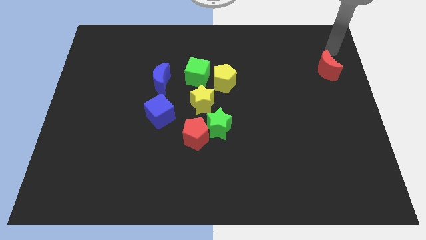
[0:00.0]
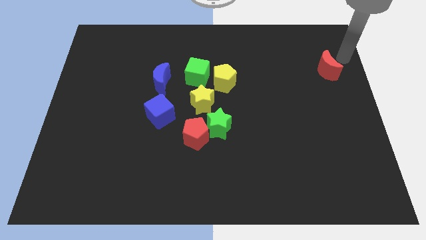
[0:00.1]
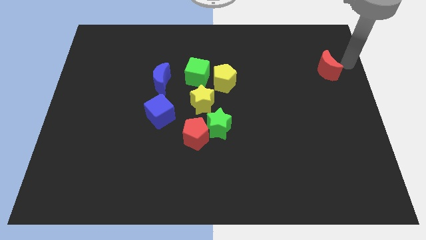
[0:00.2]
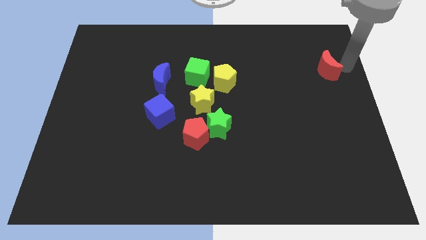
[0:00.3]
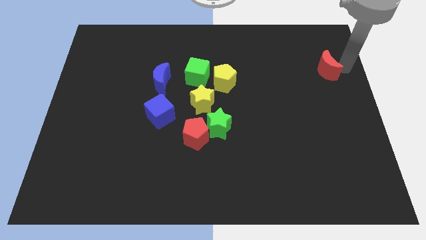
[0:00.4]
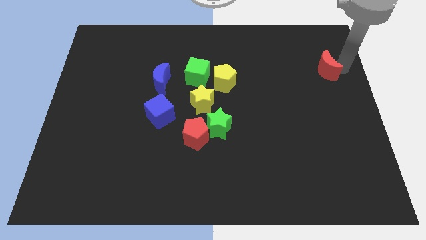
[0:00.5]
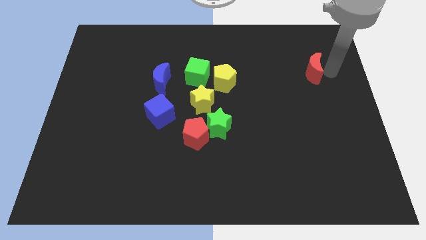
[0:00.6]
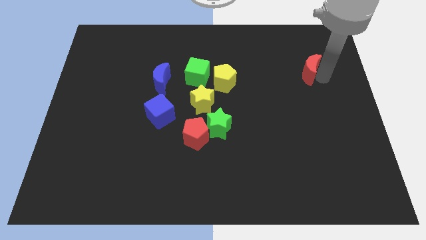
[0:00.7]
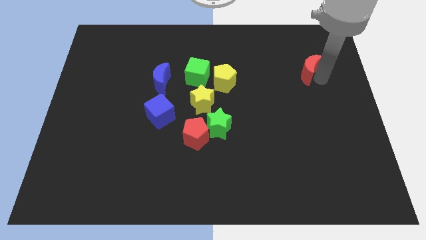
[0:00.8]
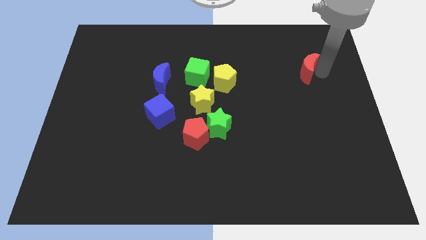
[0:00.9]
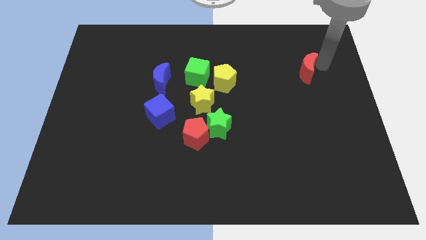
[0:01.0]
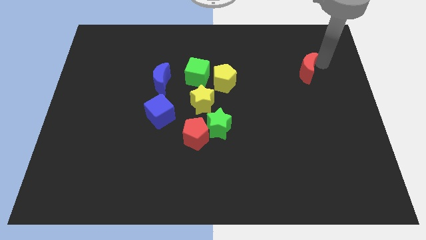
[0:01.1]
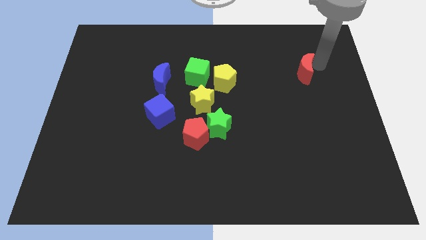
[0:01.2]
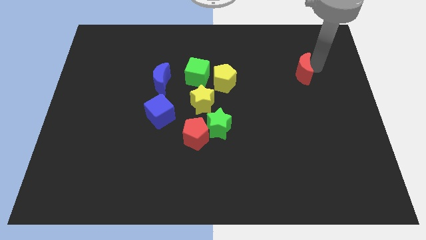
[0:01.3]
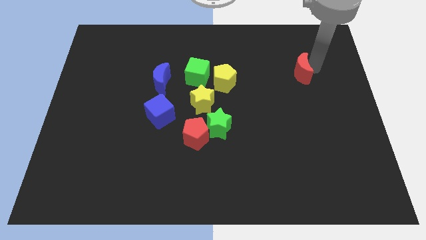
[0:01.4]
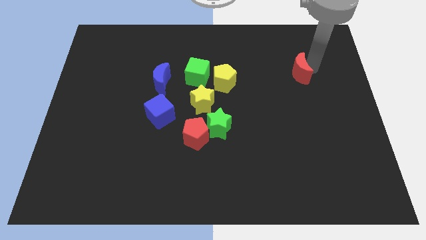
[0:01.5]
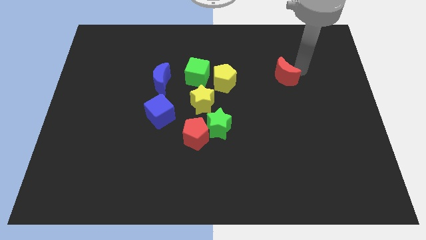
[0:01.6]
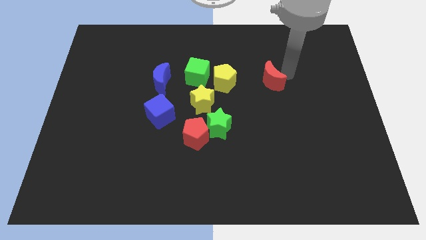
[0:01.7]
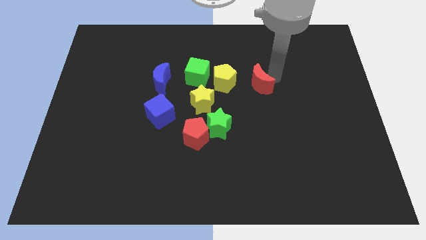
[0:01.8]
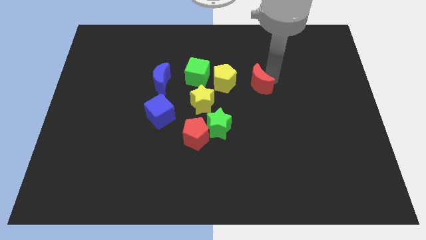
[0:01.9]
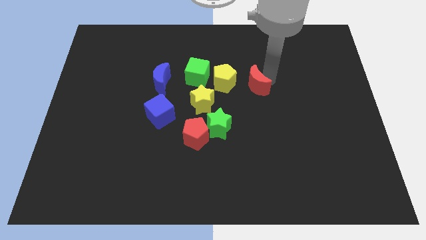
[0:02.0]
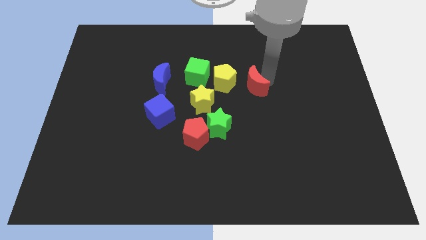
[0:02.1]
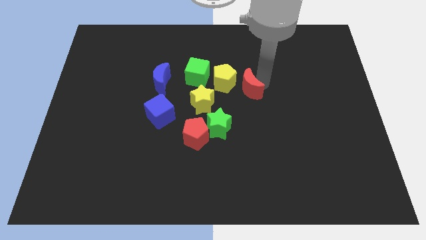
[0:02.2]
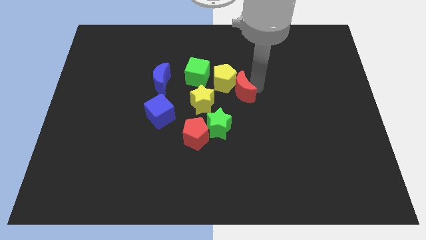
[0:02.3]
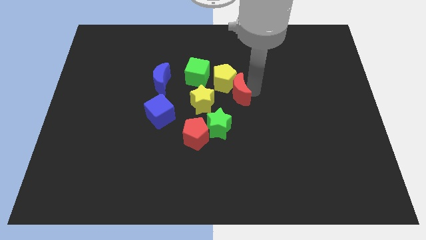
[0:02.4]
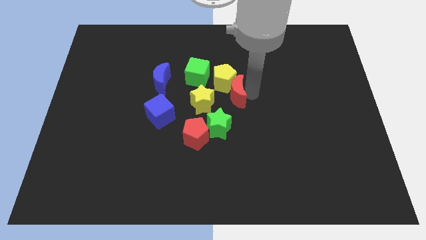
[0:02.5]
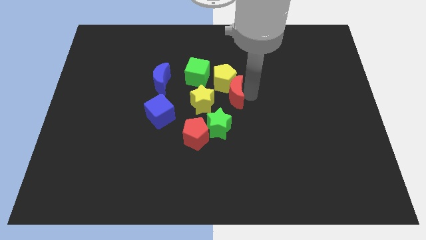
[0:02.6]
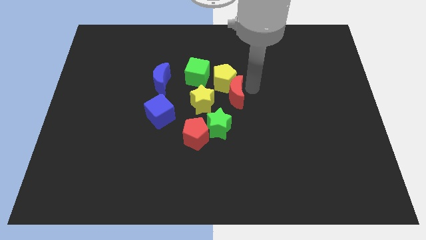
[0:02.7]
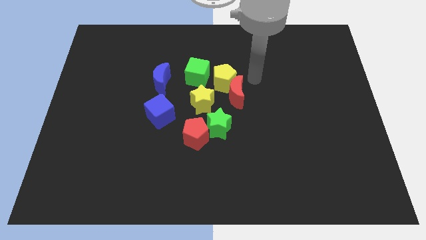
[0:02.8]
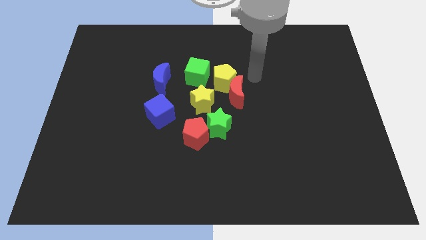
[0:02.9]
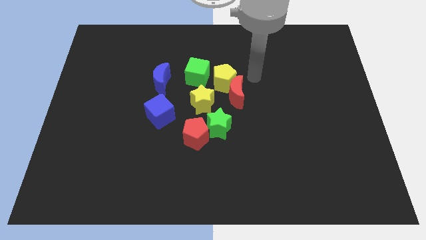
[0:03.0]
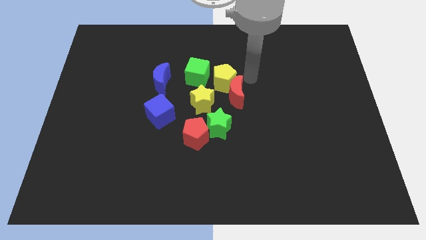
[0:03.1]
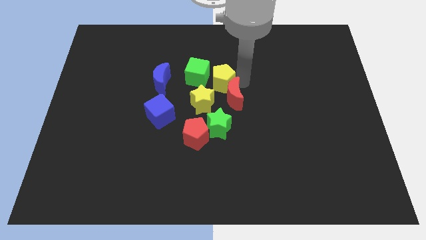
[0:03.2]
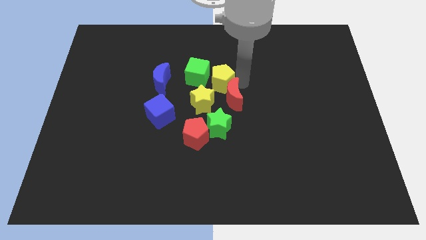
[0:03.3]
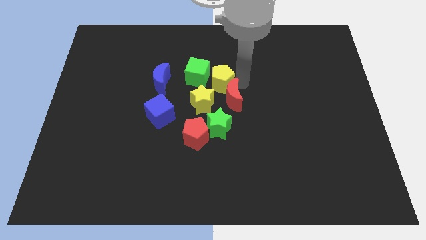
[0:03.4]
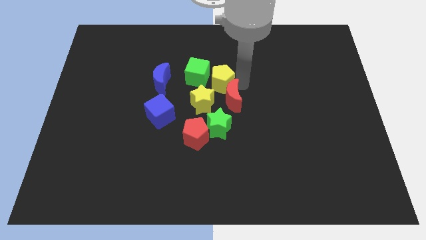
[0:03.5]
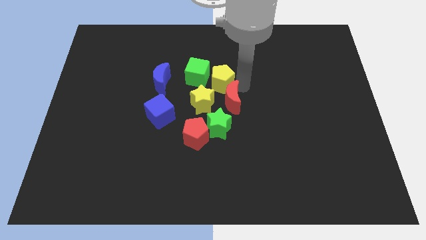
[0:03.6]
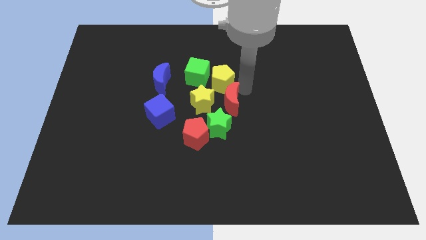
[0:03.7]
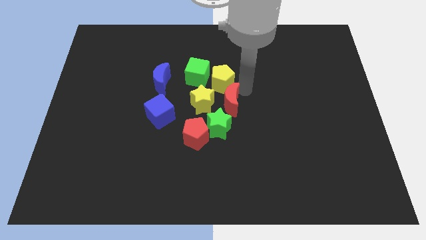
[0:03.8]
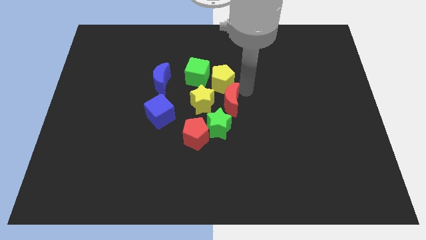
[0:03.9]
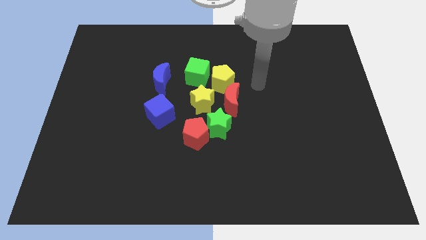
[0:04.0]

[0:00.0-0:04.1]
push red crescent into yellow pentagon

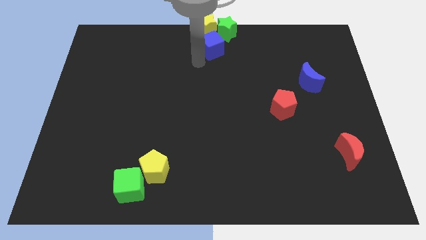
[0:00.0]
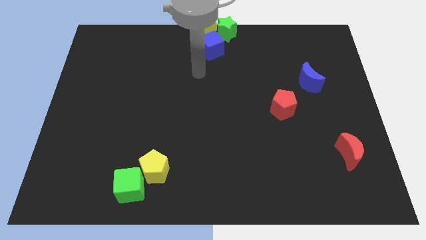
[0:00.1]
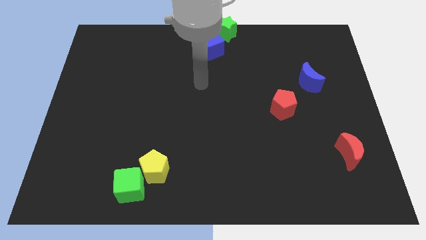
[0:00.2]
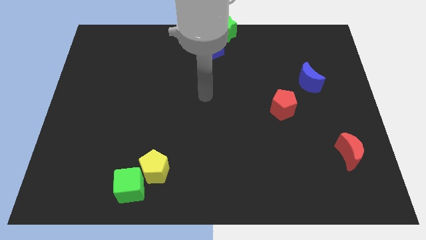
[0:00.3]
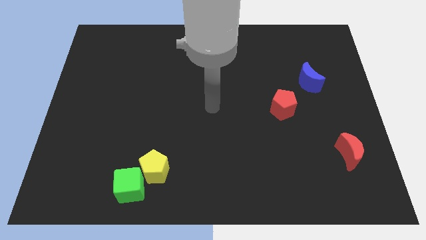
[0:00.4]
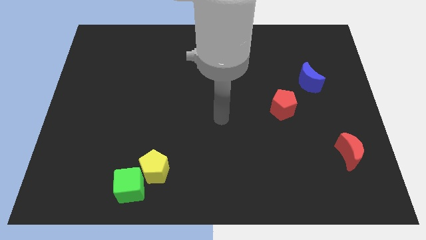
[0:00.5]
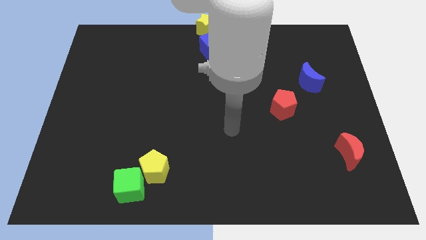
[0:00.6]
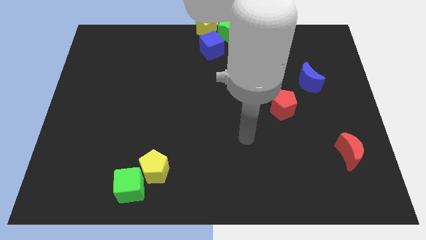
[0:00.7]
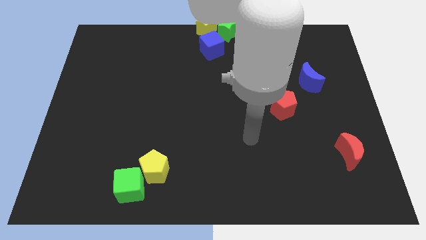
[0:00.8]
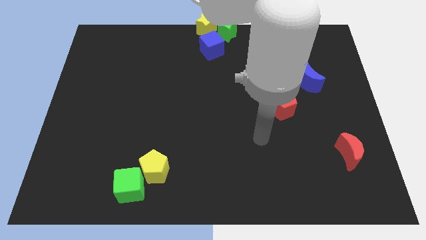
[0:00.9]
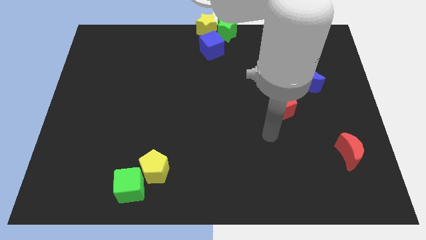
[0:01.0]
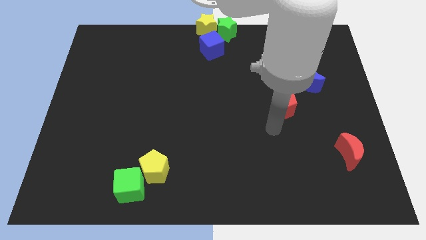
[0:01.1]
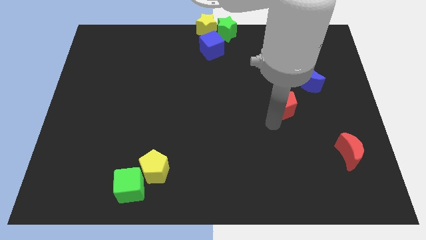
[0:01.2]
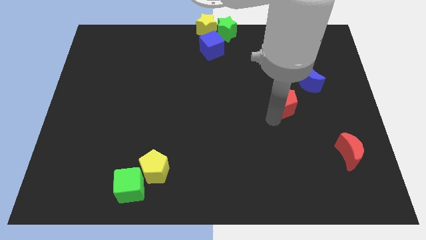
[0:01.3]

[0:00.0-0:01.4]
move your arm away from the blue cube

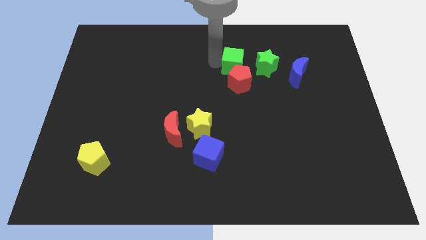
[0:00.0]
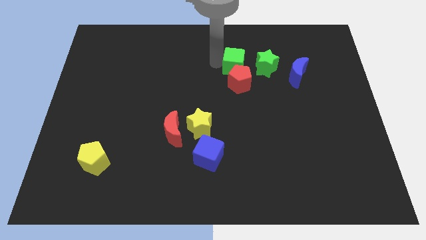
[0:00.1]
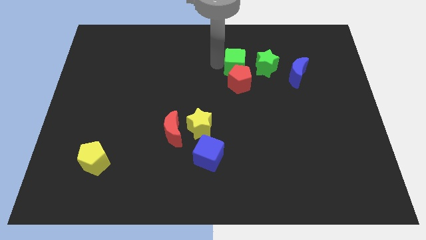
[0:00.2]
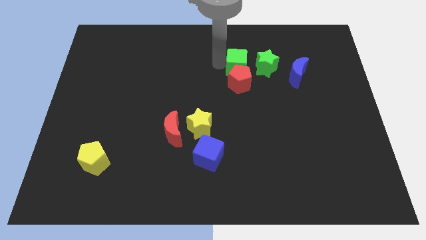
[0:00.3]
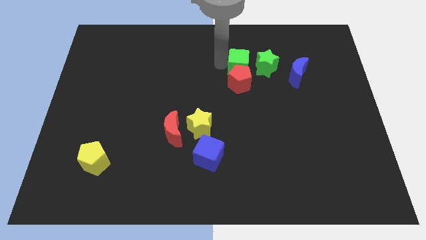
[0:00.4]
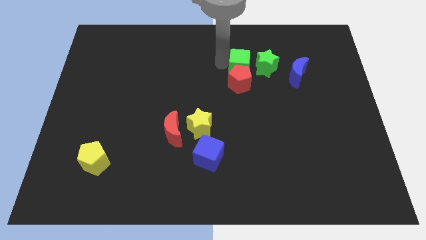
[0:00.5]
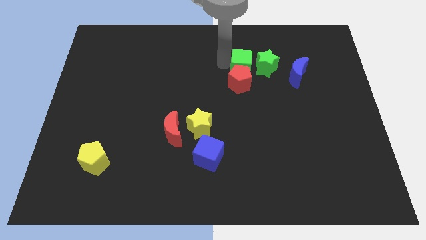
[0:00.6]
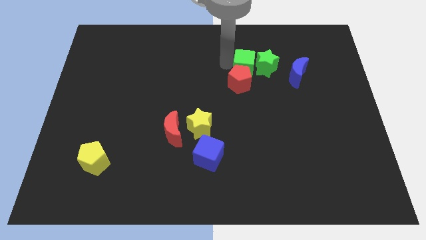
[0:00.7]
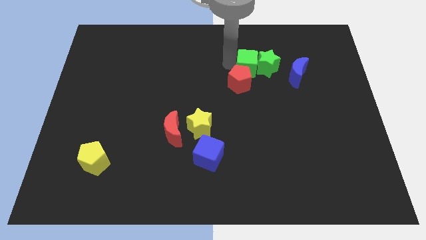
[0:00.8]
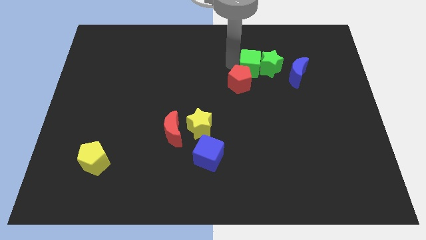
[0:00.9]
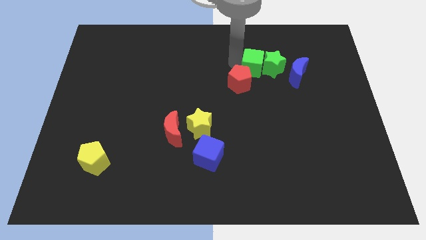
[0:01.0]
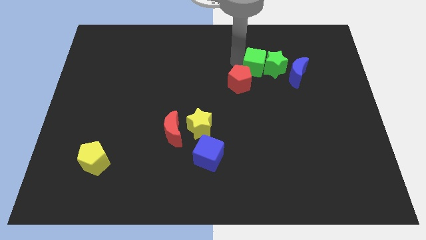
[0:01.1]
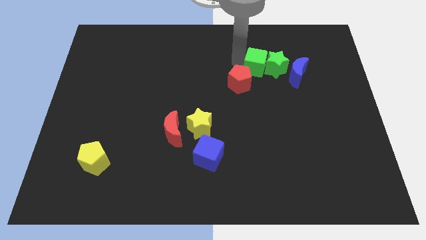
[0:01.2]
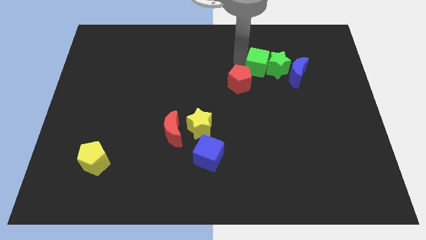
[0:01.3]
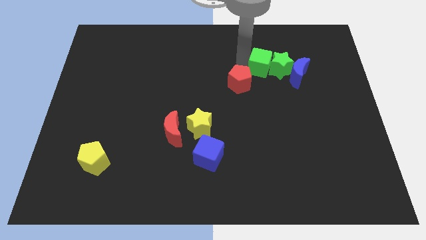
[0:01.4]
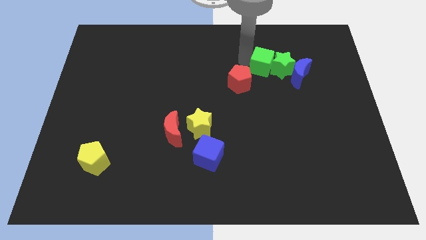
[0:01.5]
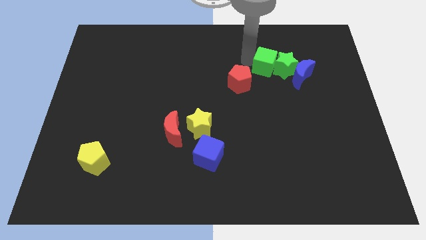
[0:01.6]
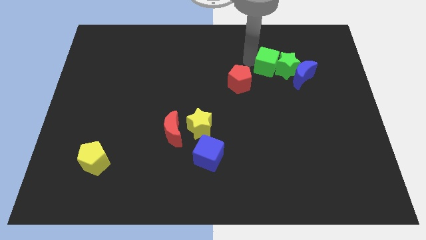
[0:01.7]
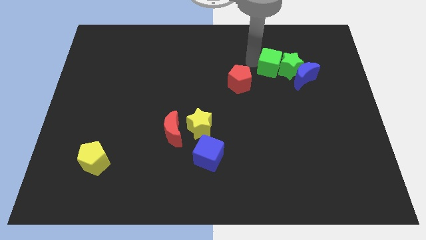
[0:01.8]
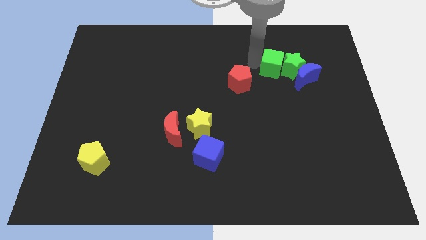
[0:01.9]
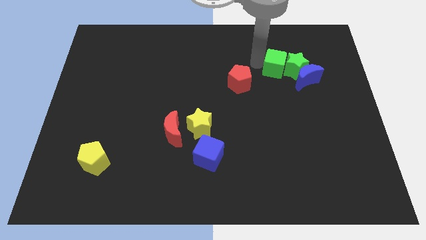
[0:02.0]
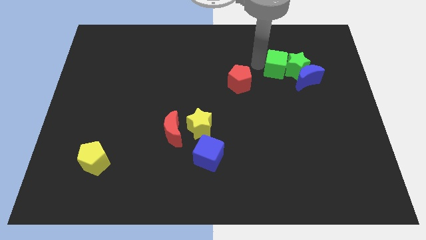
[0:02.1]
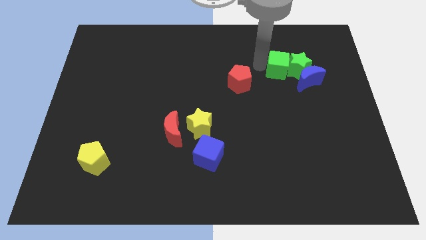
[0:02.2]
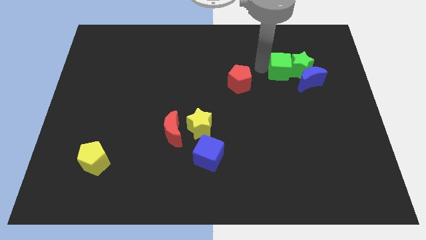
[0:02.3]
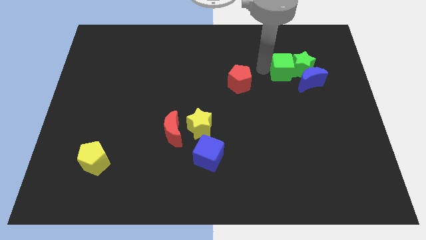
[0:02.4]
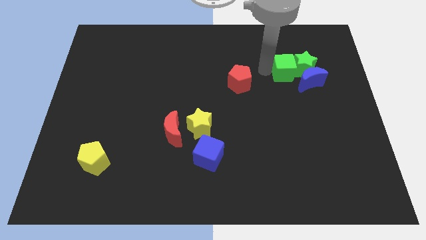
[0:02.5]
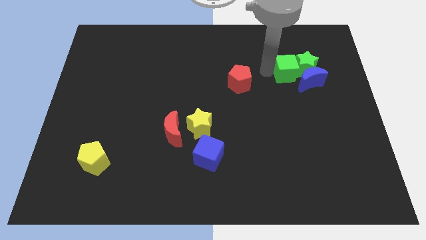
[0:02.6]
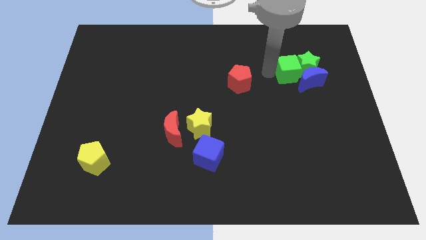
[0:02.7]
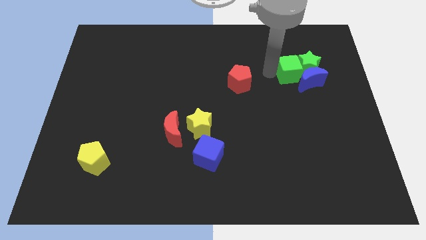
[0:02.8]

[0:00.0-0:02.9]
place the green blocks above the blue crescent

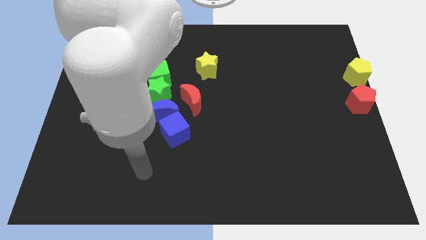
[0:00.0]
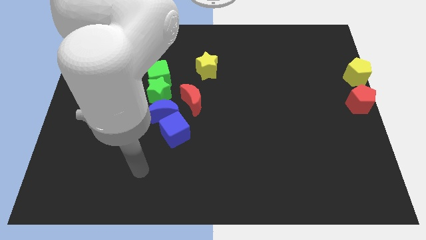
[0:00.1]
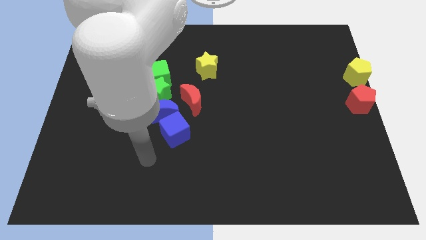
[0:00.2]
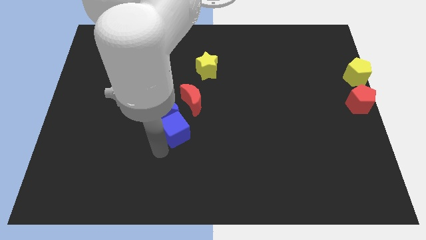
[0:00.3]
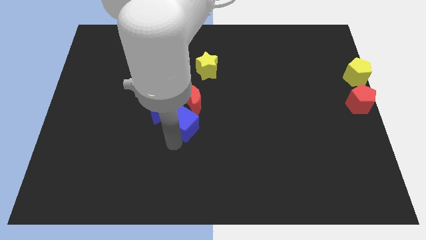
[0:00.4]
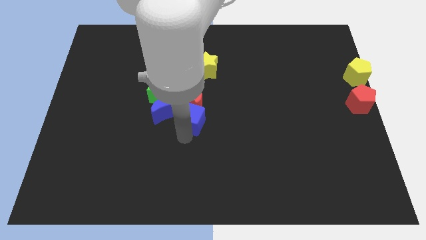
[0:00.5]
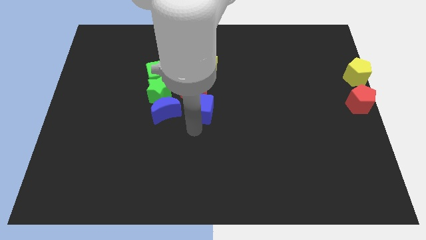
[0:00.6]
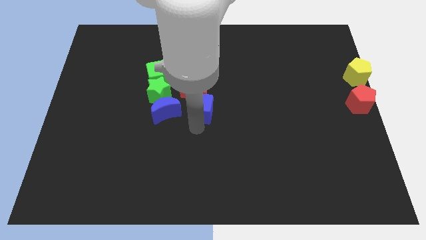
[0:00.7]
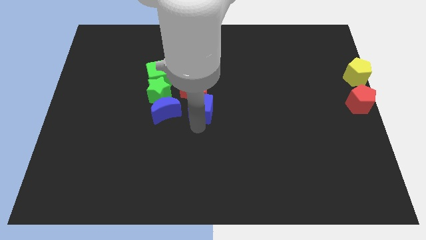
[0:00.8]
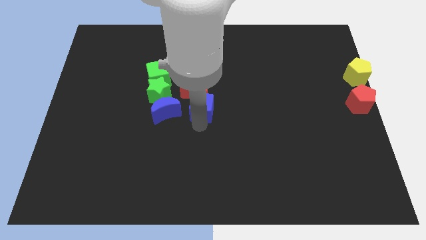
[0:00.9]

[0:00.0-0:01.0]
separate the group of blue blocks
